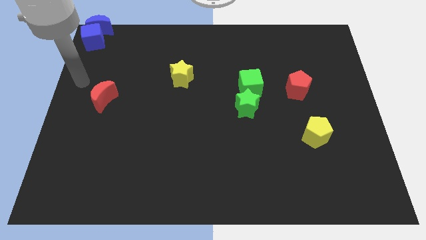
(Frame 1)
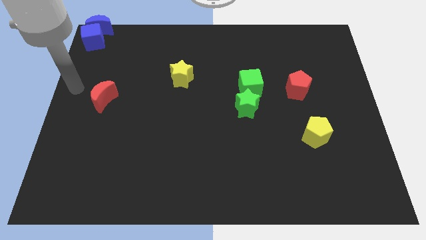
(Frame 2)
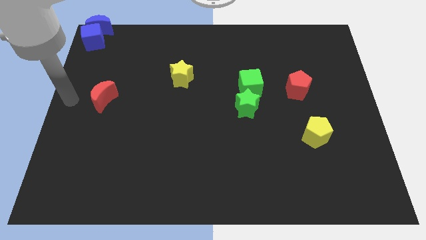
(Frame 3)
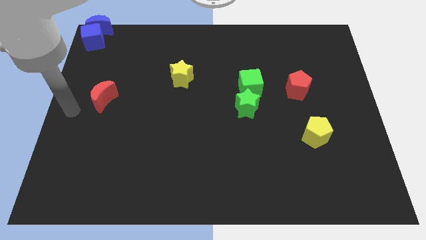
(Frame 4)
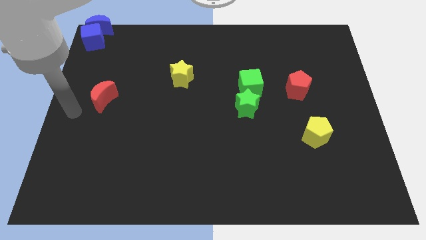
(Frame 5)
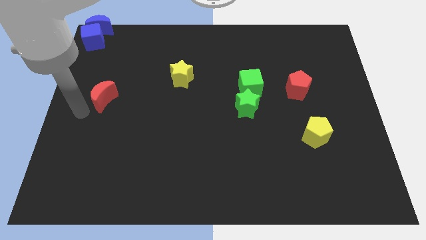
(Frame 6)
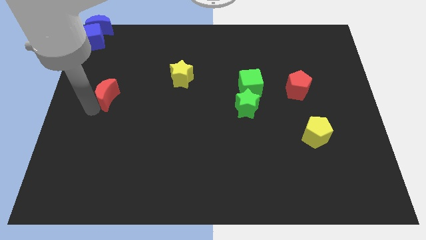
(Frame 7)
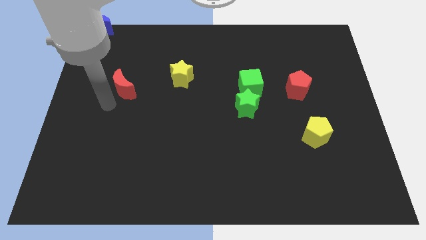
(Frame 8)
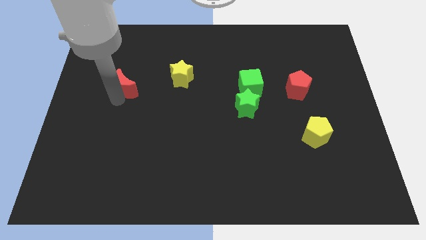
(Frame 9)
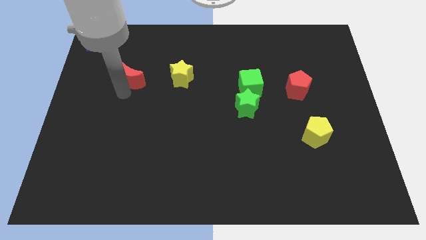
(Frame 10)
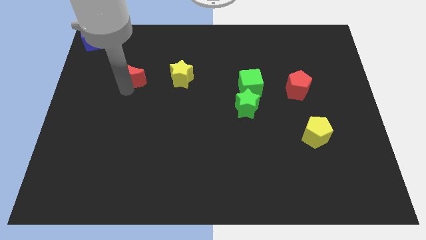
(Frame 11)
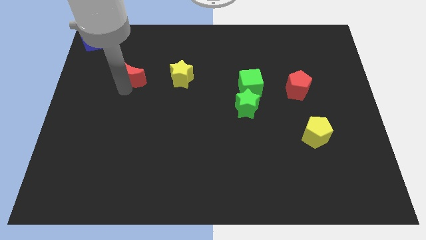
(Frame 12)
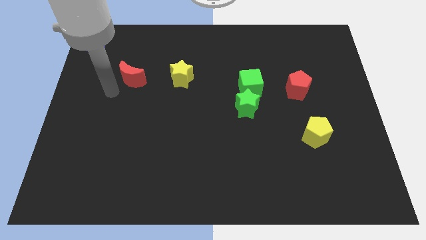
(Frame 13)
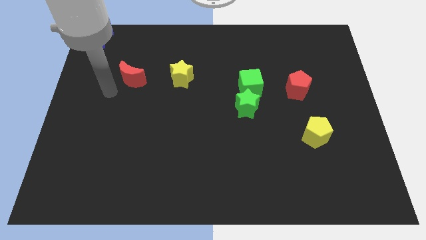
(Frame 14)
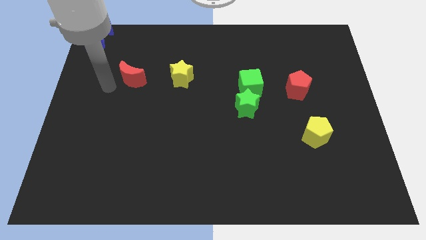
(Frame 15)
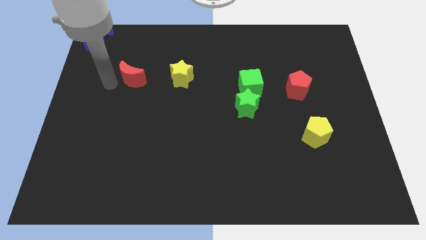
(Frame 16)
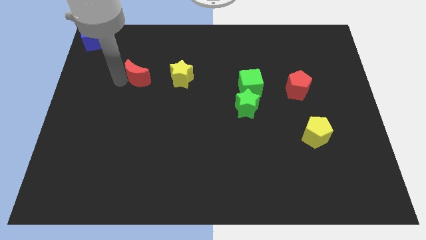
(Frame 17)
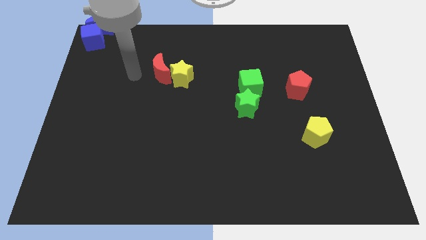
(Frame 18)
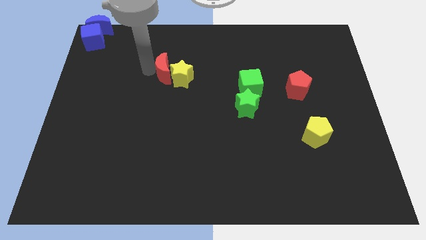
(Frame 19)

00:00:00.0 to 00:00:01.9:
move the red crescent to the left of the yellow star

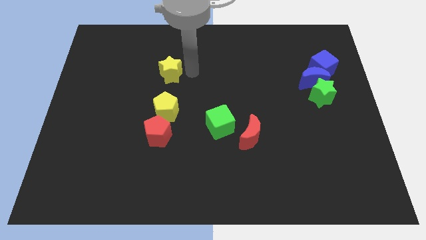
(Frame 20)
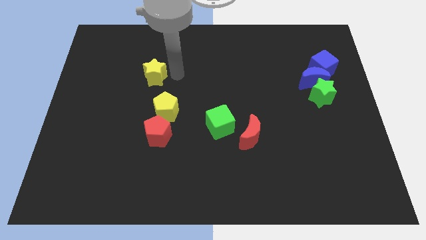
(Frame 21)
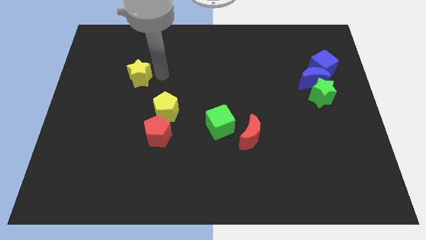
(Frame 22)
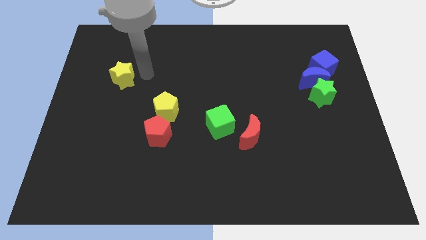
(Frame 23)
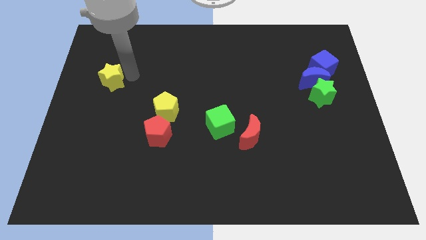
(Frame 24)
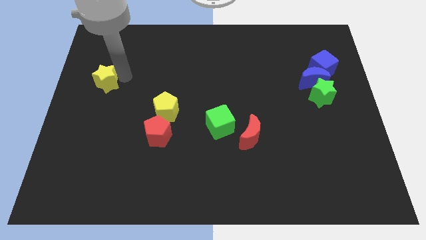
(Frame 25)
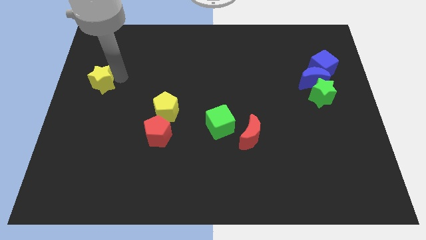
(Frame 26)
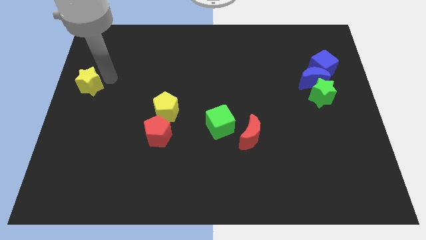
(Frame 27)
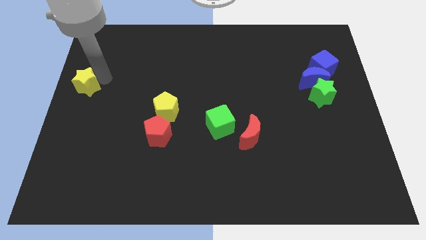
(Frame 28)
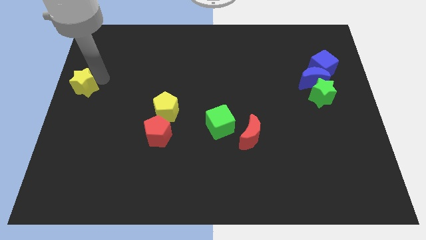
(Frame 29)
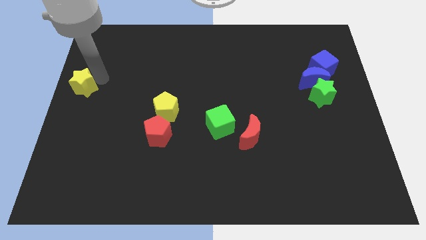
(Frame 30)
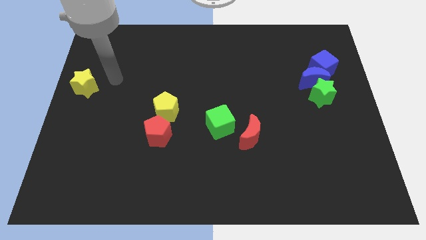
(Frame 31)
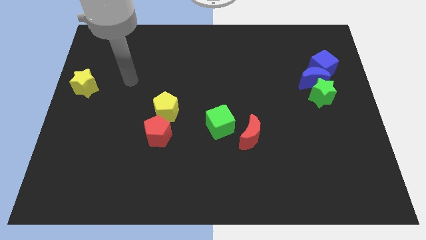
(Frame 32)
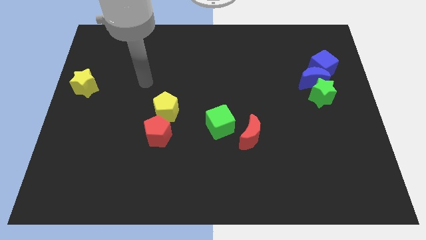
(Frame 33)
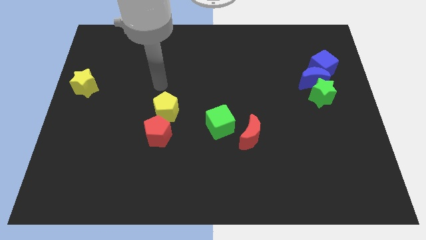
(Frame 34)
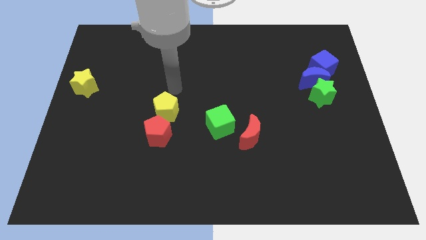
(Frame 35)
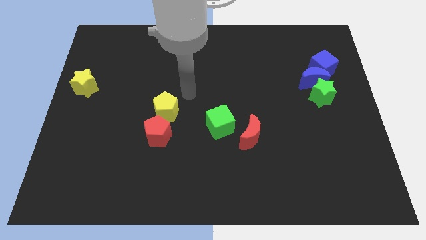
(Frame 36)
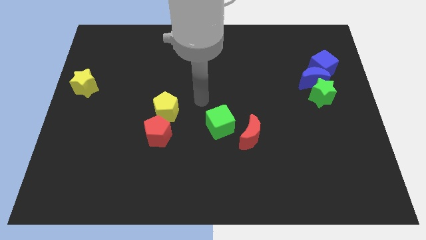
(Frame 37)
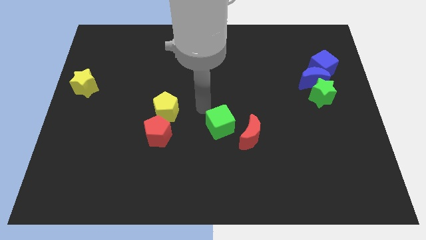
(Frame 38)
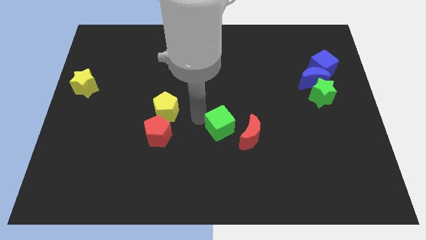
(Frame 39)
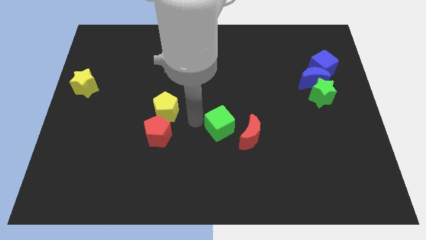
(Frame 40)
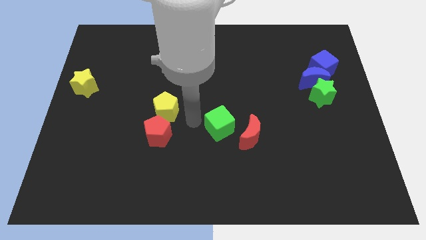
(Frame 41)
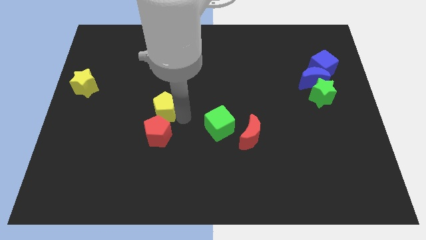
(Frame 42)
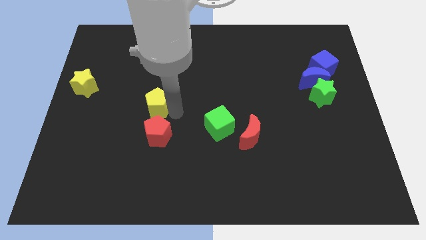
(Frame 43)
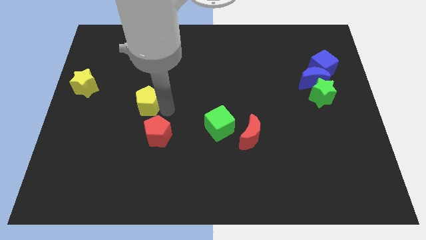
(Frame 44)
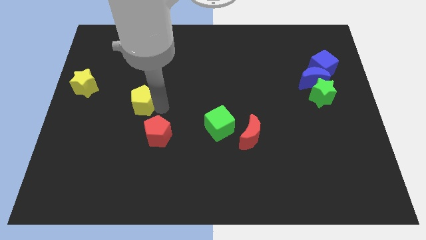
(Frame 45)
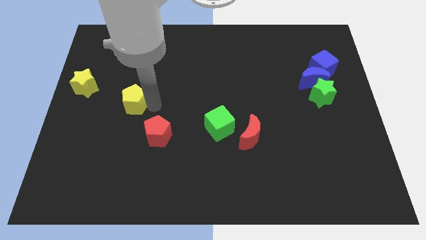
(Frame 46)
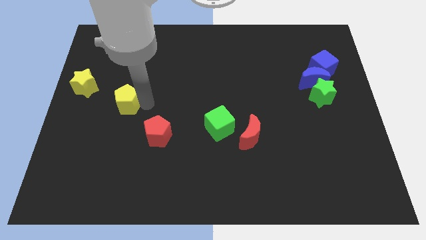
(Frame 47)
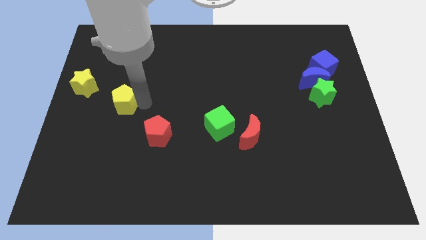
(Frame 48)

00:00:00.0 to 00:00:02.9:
push yellow pentagon slightly towards left

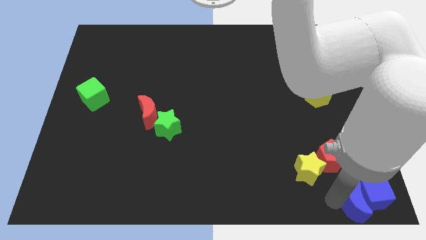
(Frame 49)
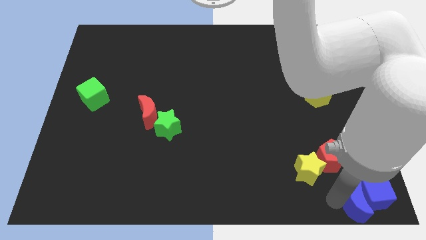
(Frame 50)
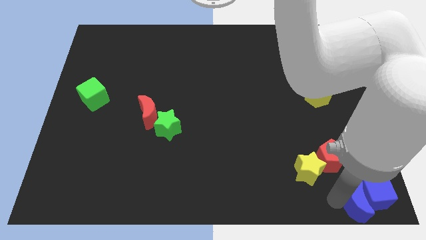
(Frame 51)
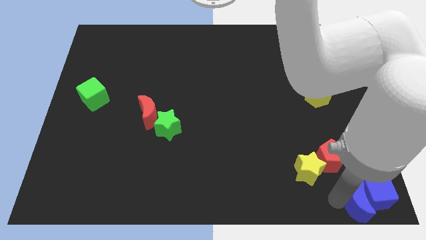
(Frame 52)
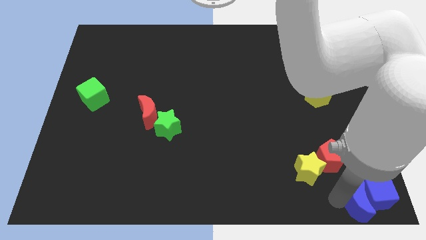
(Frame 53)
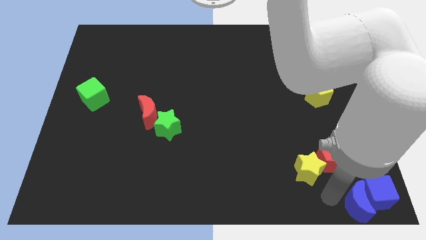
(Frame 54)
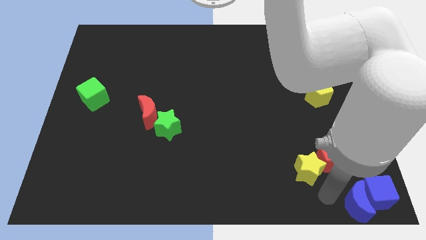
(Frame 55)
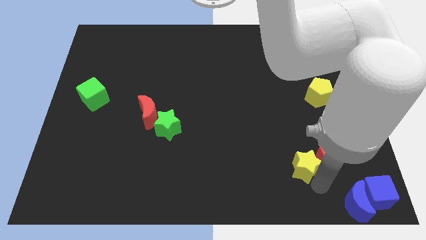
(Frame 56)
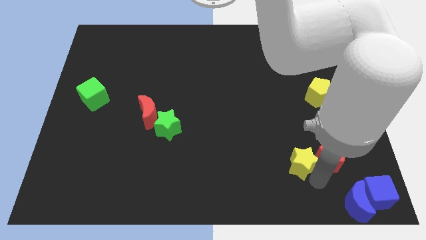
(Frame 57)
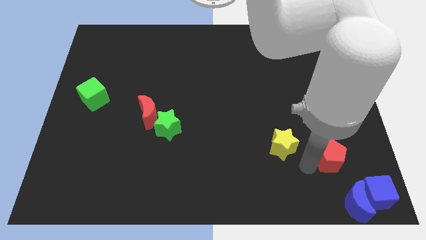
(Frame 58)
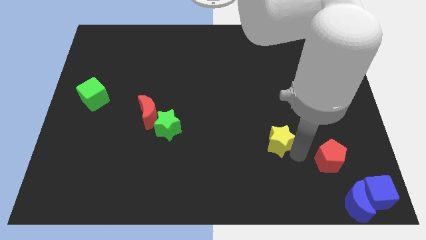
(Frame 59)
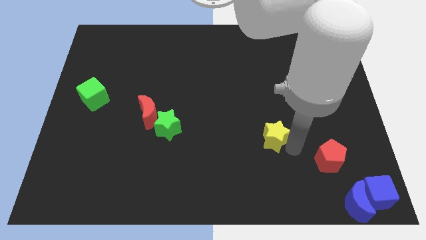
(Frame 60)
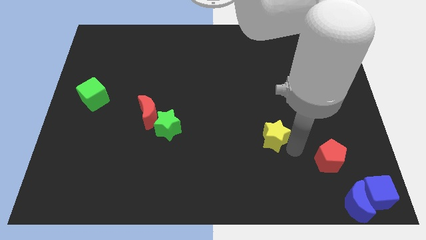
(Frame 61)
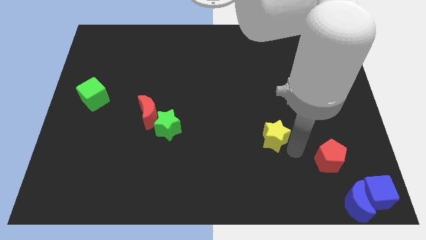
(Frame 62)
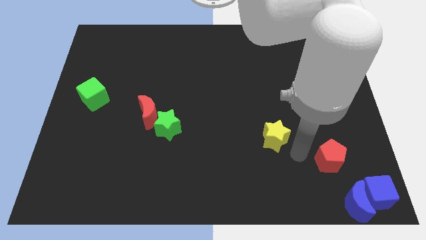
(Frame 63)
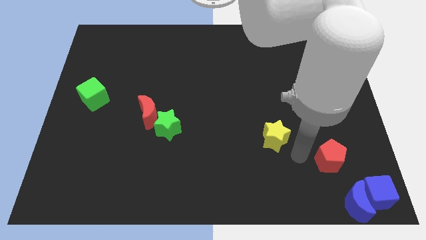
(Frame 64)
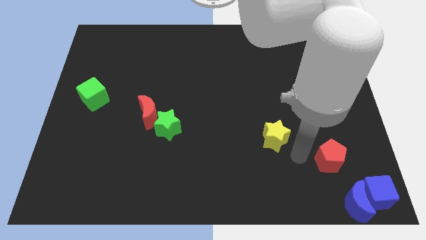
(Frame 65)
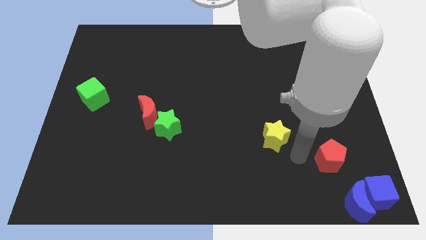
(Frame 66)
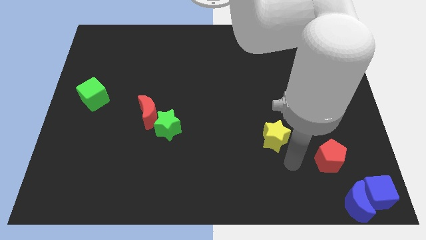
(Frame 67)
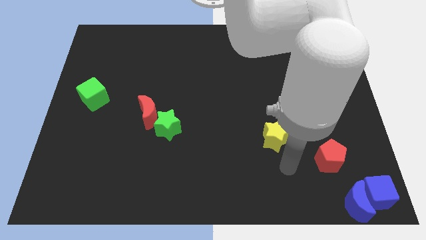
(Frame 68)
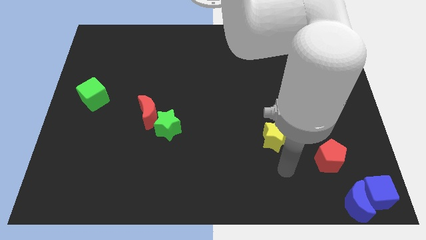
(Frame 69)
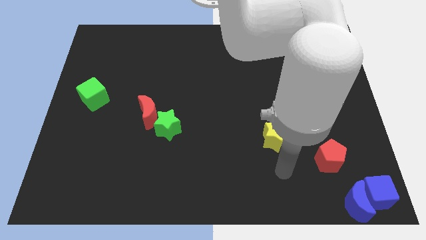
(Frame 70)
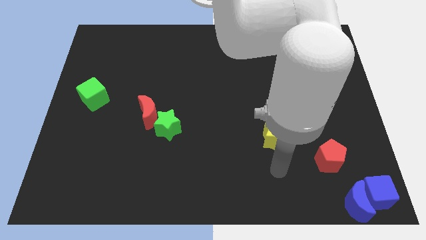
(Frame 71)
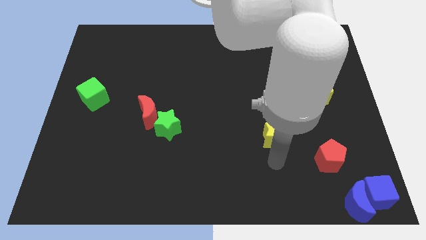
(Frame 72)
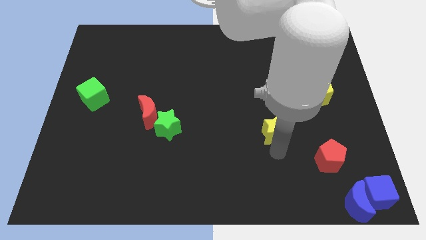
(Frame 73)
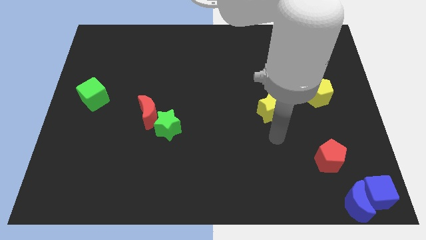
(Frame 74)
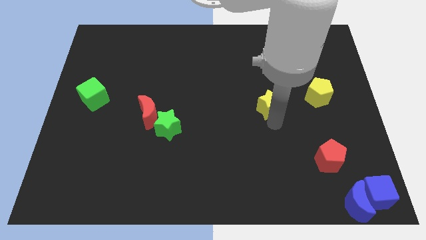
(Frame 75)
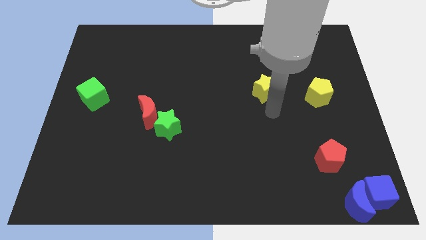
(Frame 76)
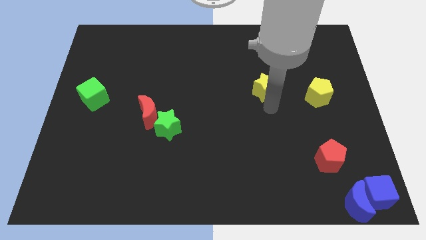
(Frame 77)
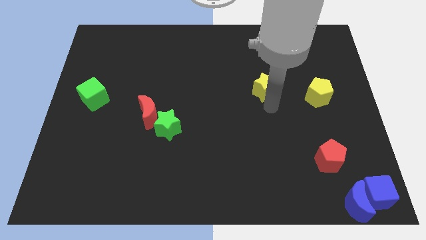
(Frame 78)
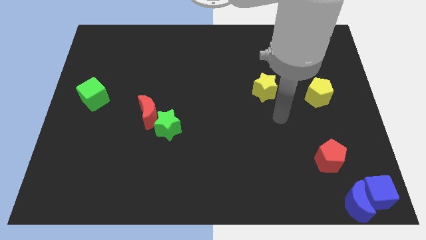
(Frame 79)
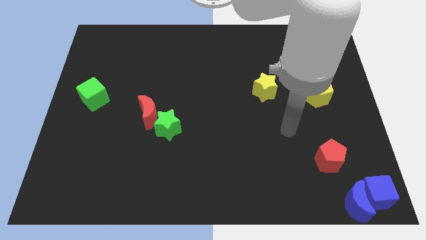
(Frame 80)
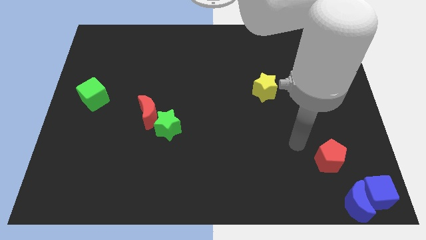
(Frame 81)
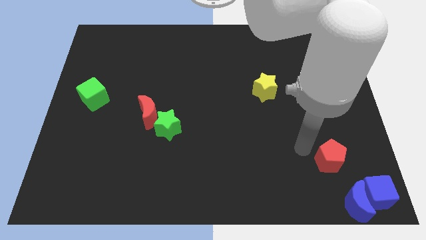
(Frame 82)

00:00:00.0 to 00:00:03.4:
move the yellow star to the left of yellow pentagon

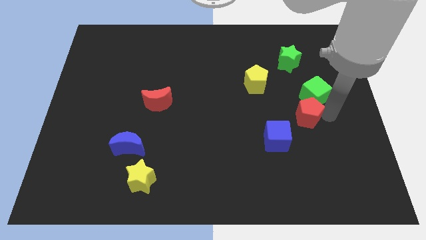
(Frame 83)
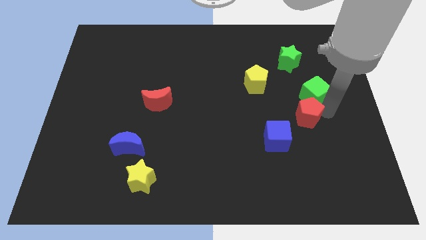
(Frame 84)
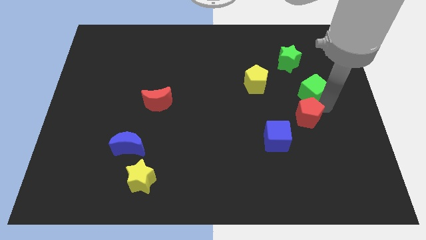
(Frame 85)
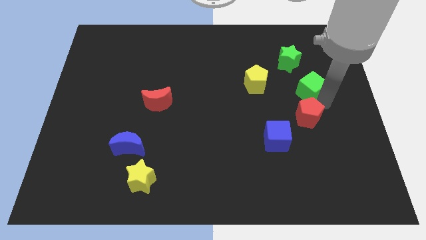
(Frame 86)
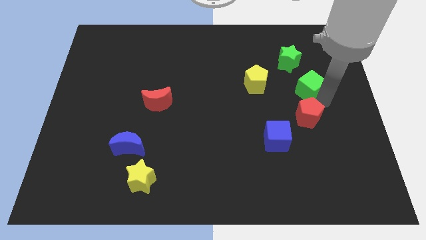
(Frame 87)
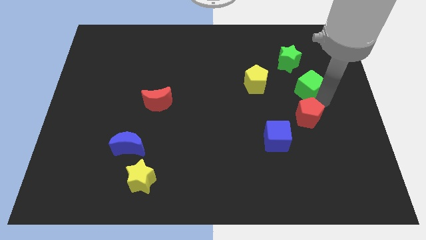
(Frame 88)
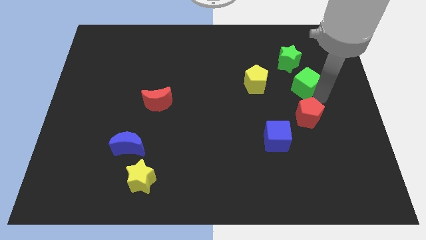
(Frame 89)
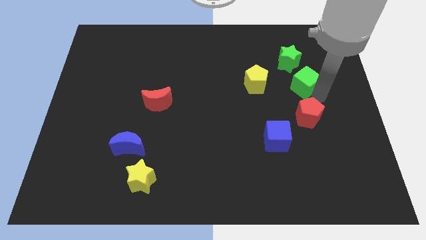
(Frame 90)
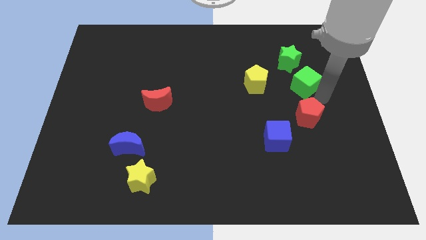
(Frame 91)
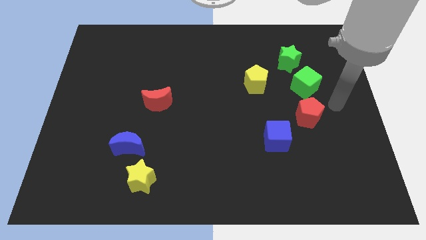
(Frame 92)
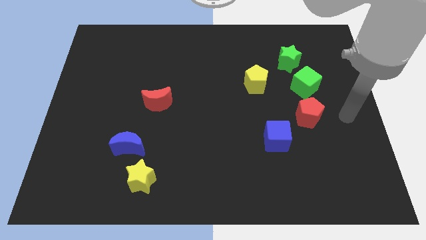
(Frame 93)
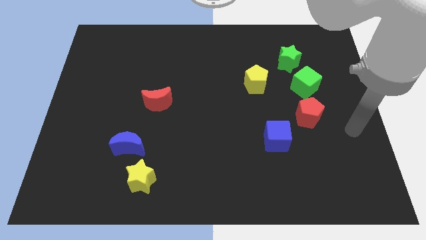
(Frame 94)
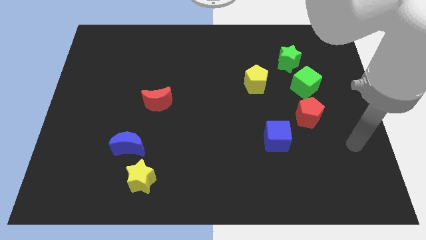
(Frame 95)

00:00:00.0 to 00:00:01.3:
move the green cube vertically to the top of the red pentagon
